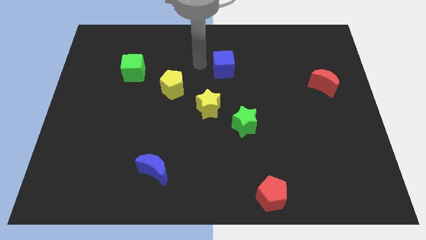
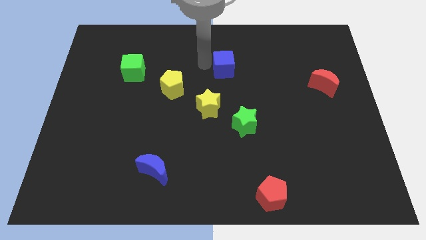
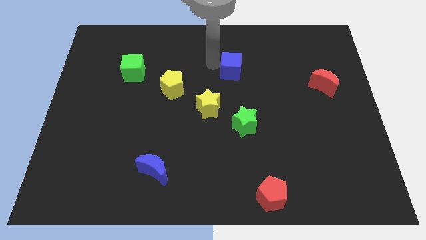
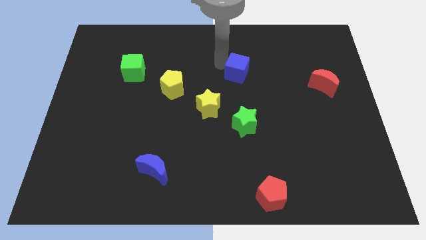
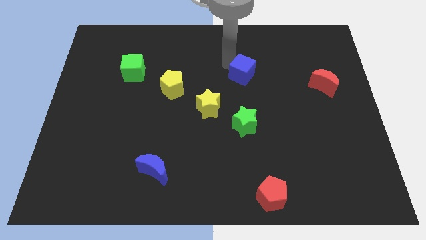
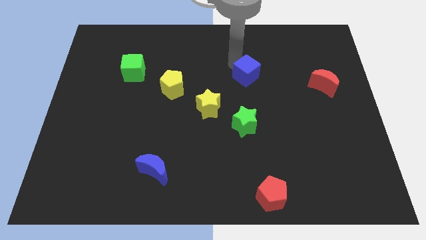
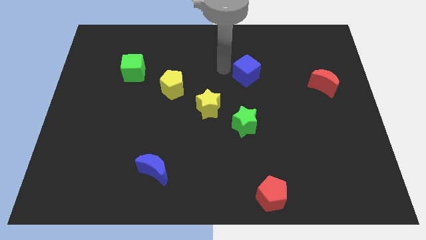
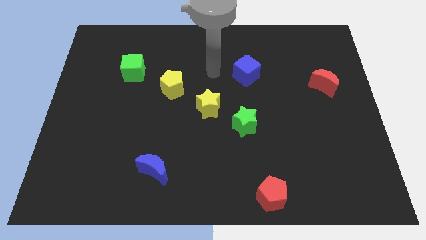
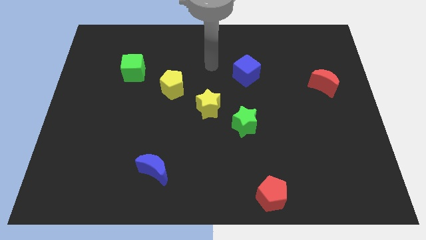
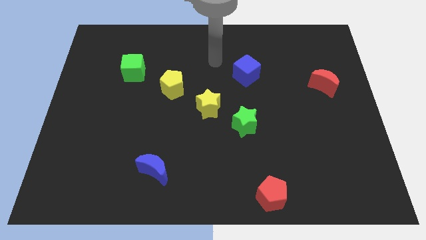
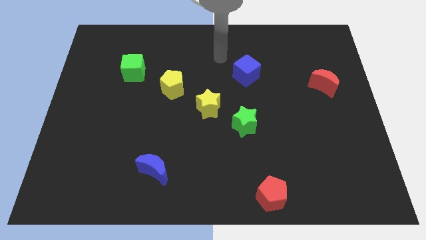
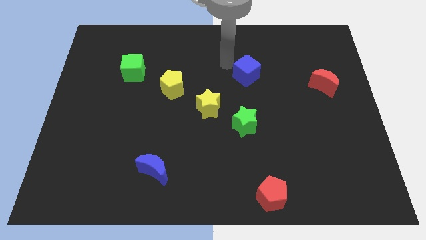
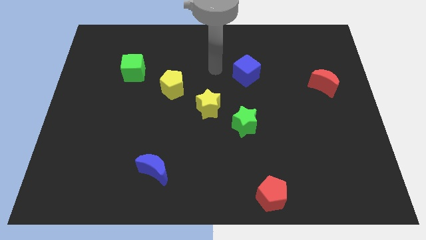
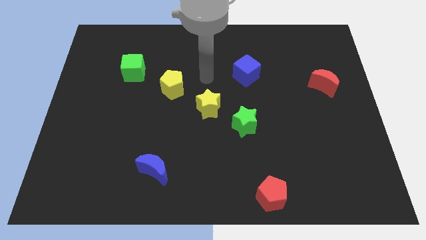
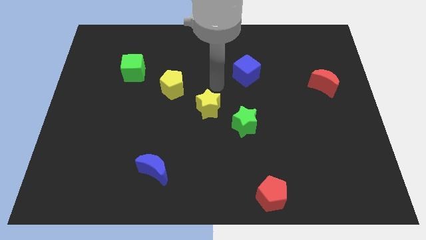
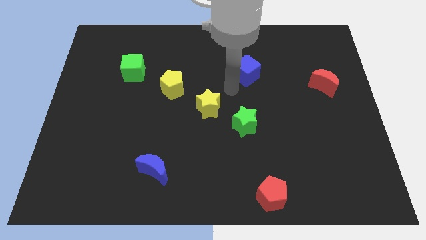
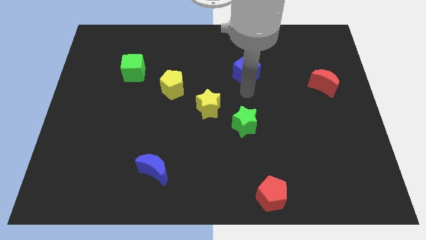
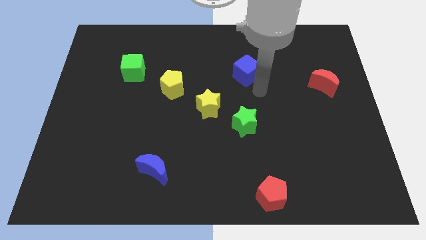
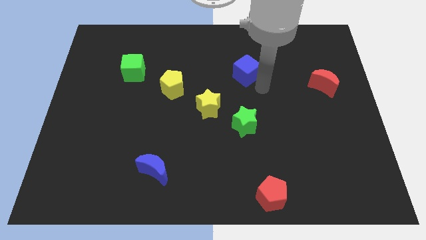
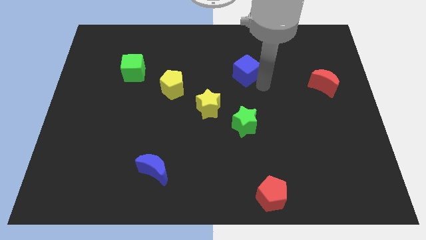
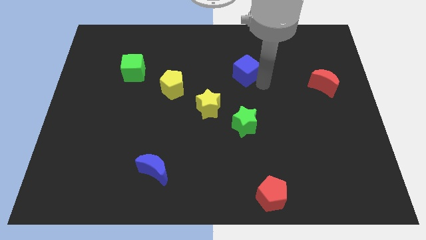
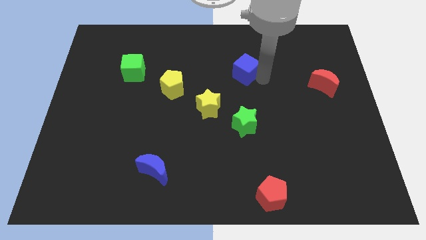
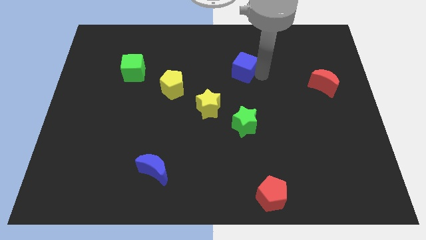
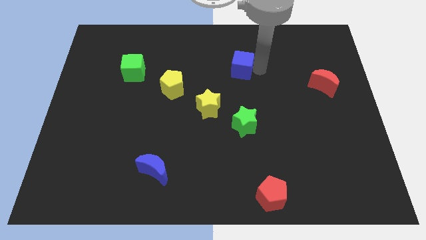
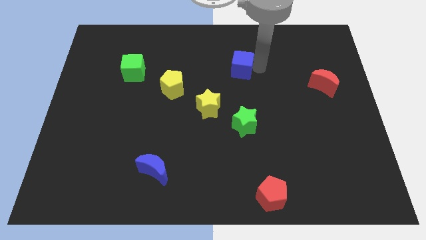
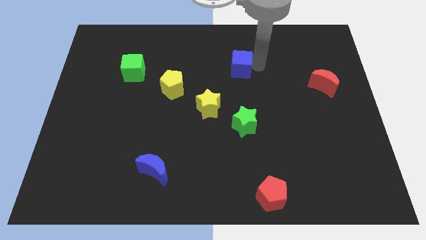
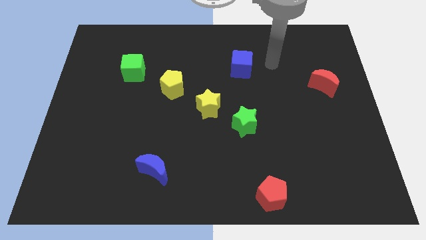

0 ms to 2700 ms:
place the blue cube to the top right of the yellow star

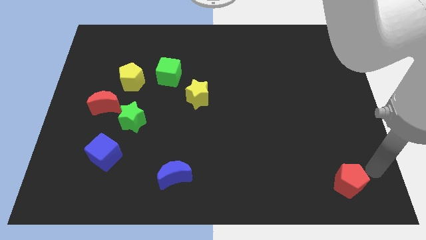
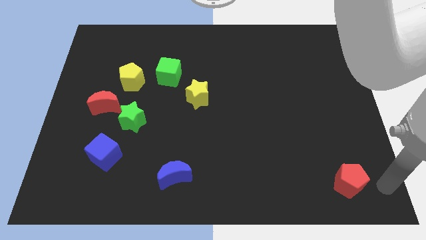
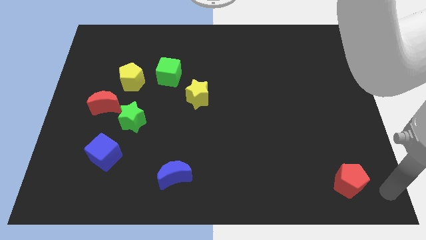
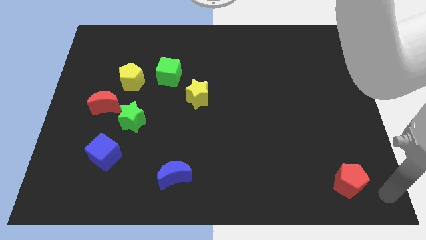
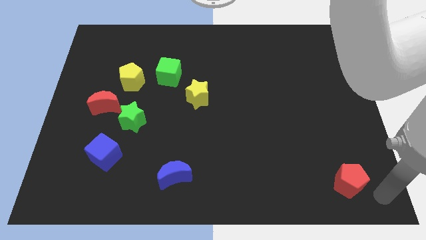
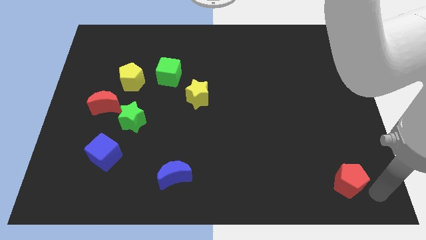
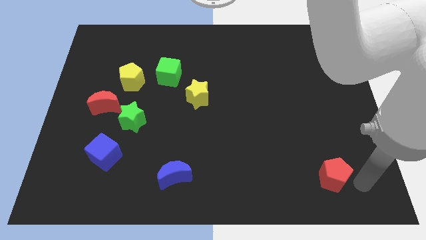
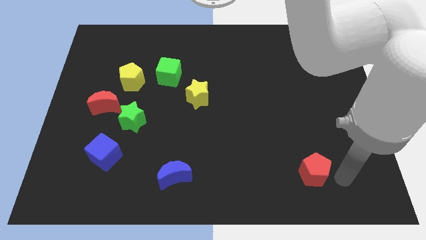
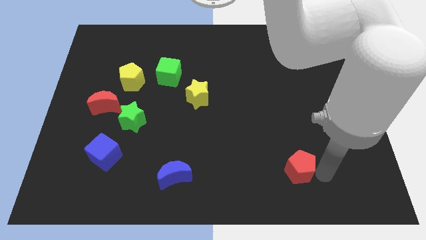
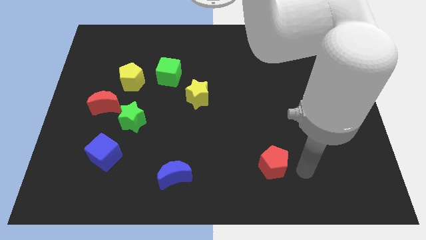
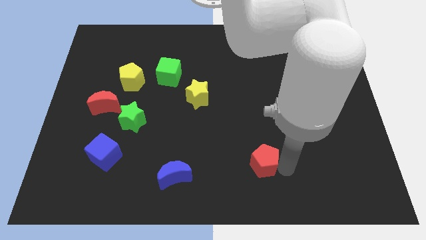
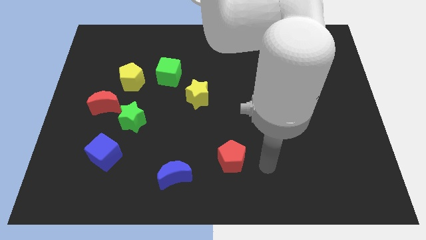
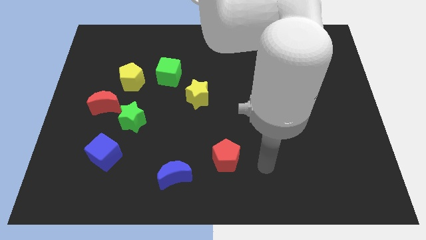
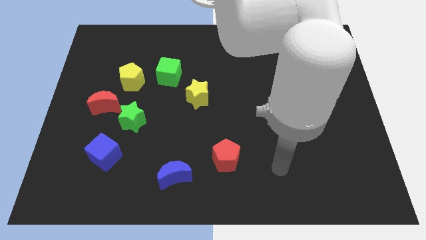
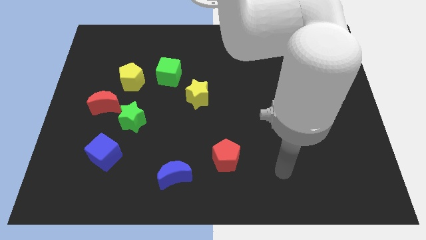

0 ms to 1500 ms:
move the red pentagon to the top right side of the blue moon

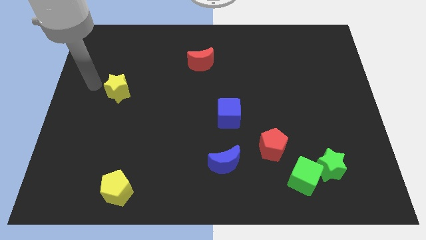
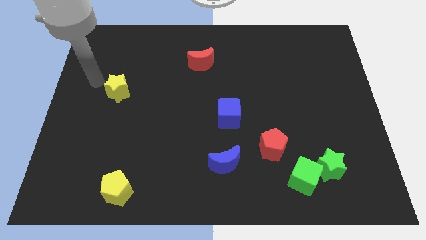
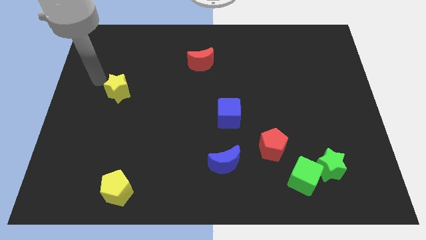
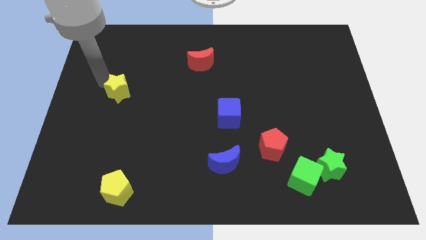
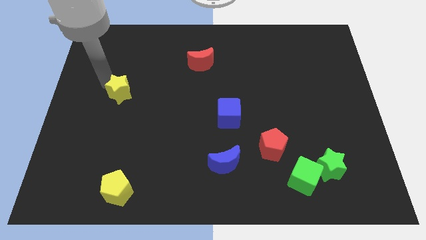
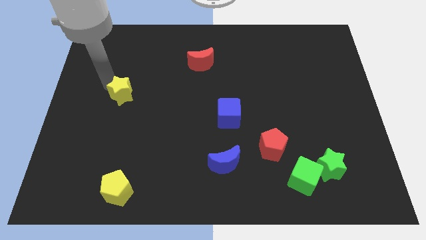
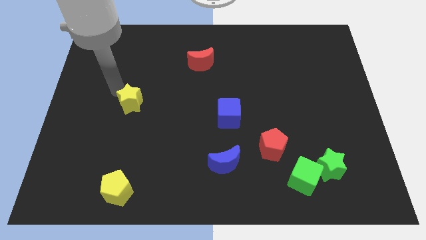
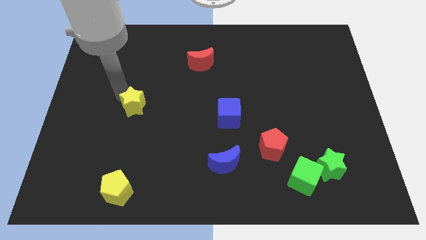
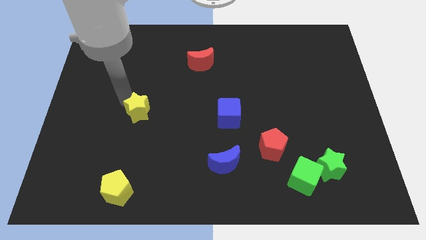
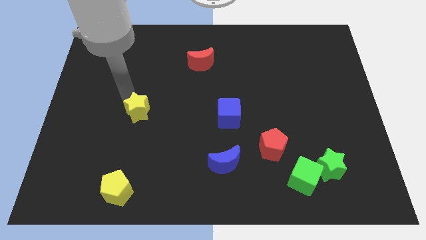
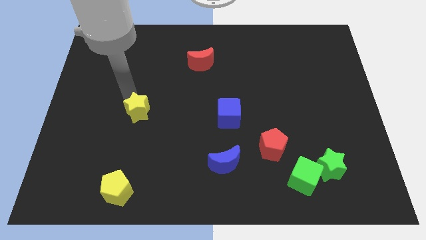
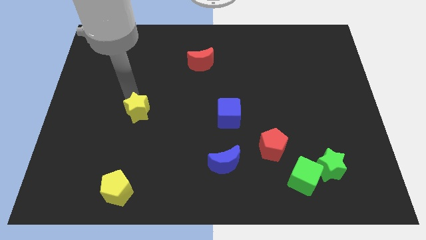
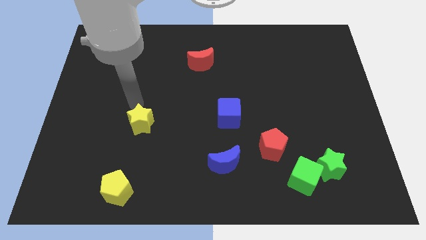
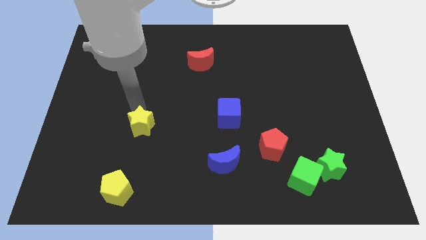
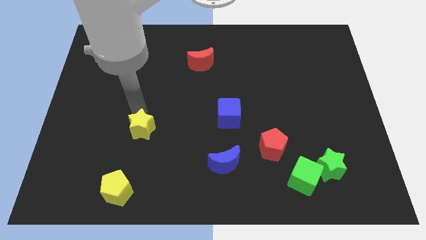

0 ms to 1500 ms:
place the yellow star at the top of the yellow pentagon

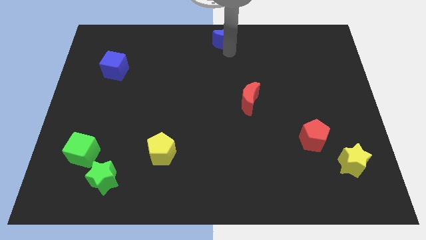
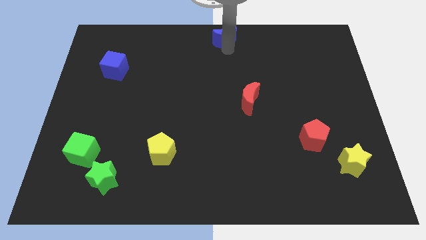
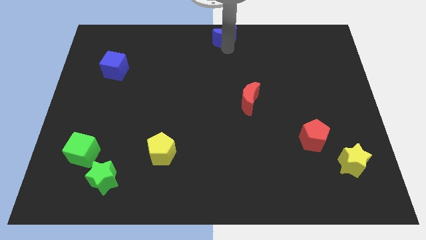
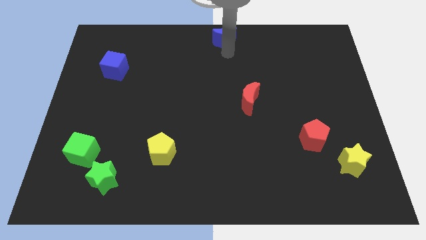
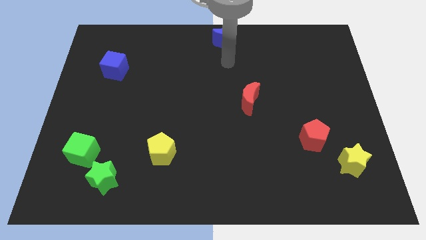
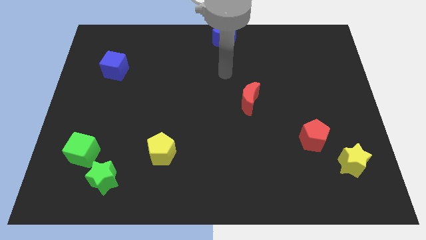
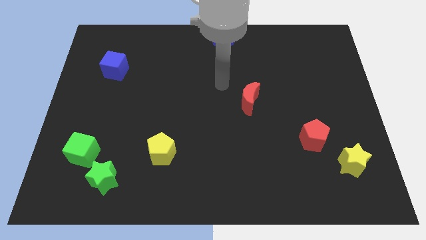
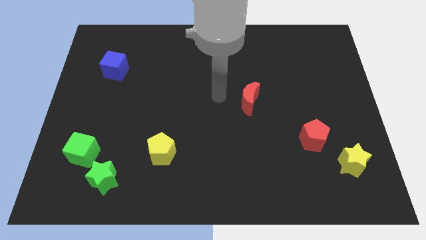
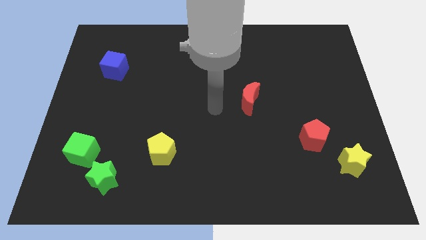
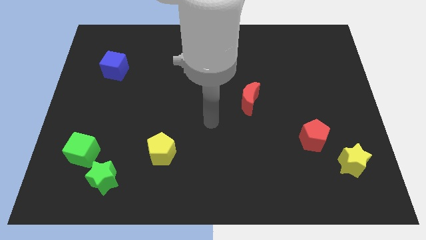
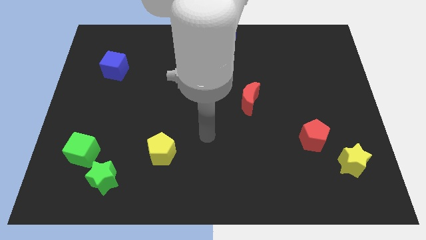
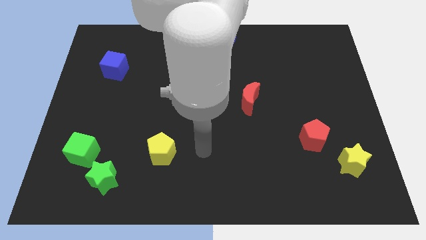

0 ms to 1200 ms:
move your arm to the right side of the yellow pentagon

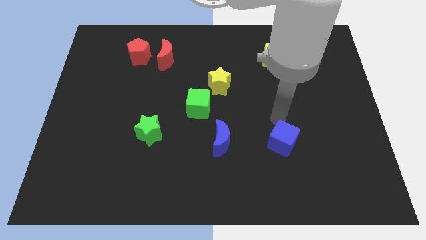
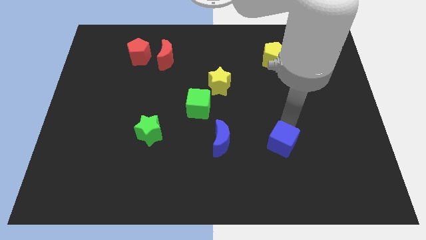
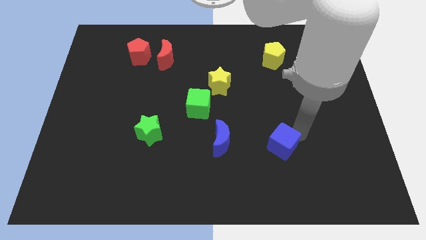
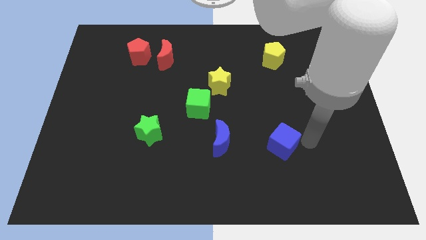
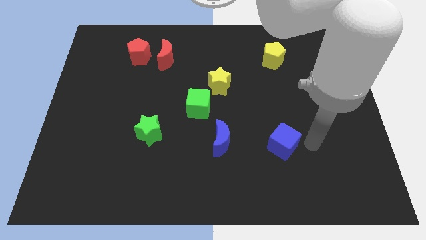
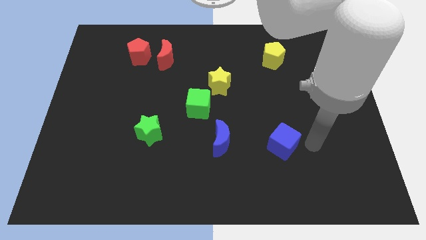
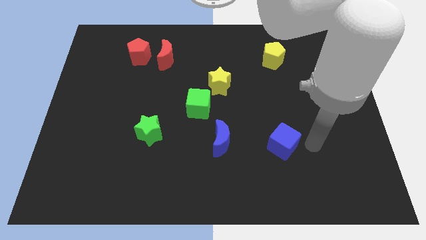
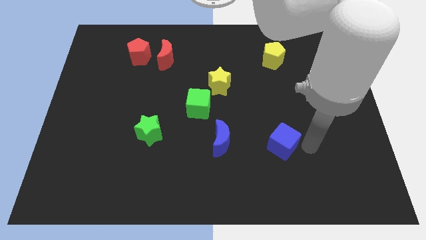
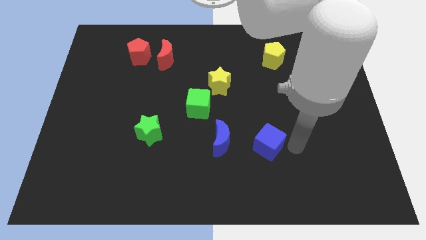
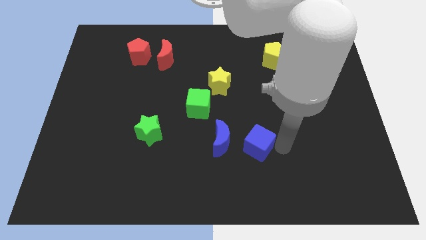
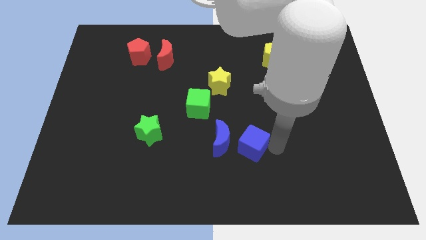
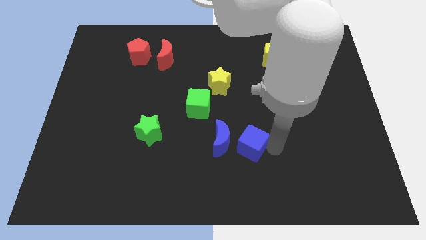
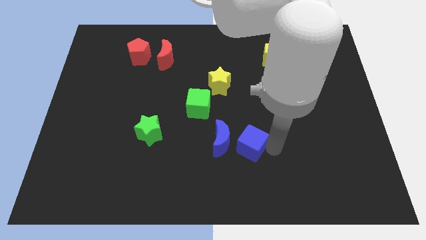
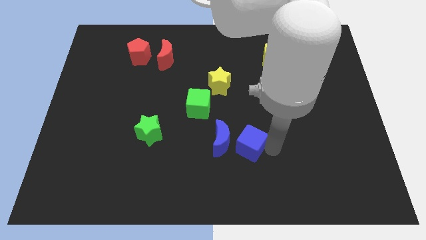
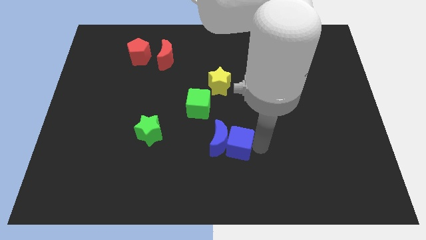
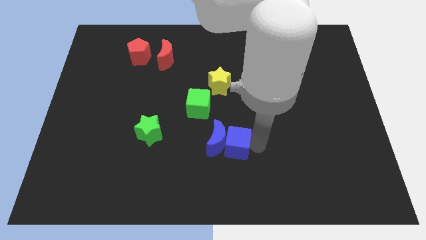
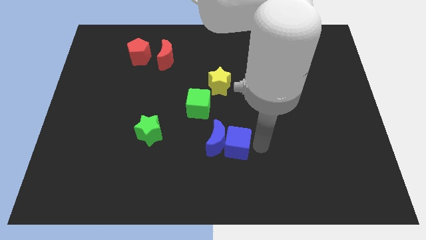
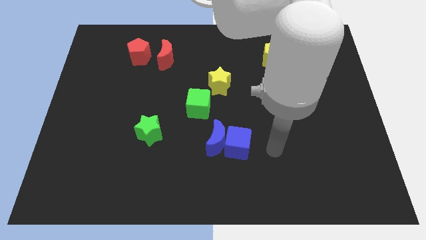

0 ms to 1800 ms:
push blue cube into blue crescent

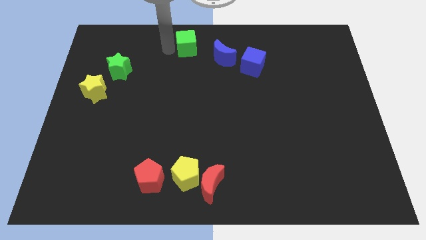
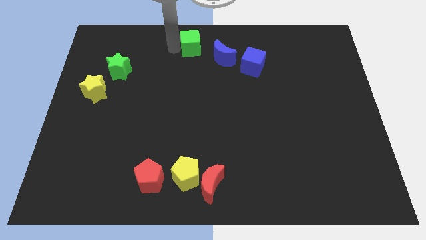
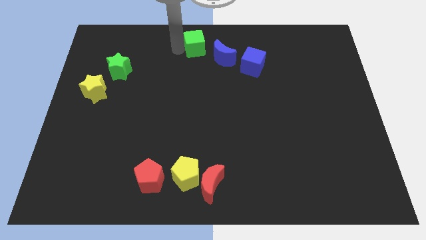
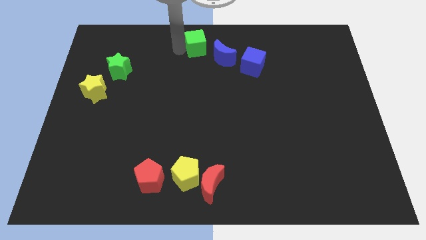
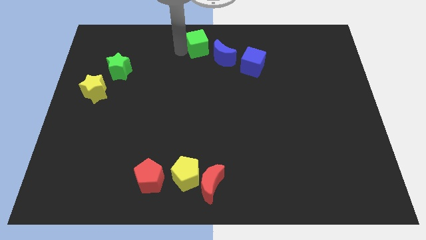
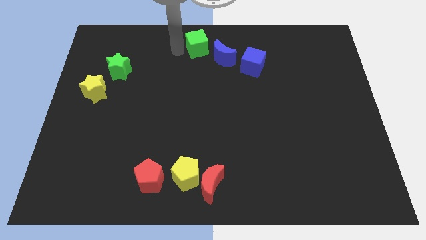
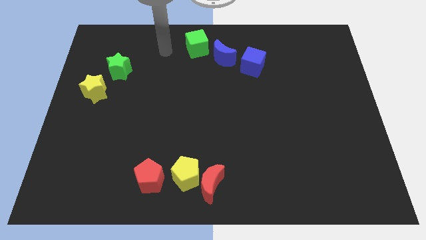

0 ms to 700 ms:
slide the green cube towards the right the side
